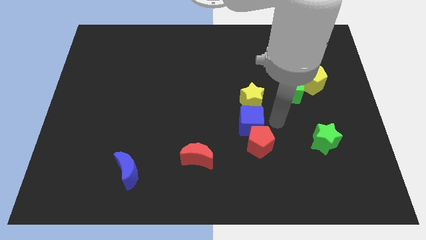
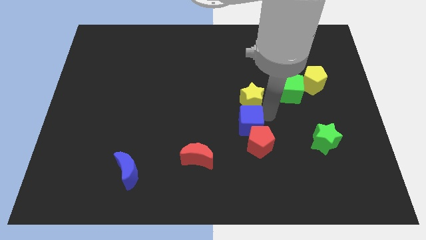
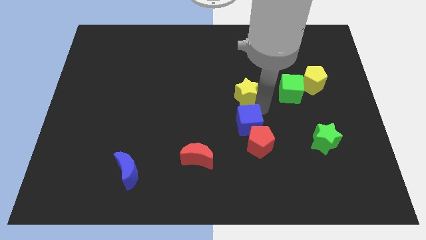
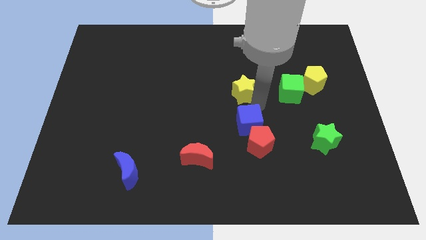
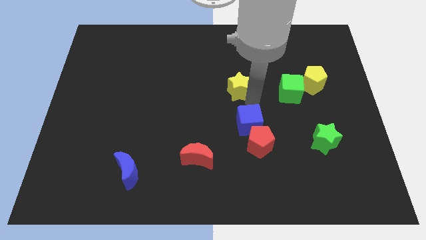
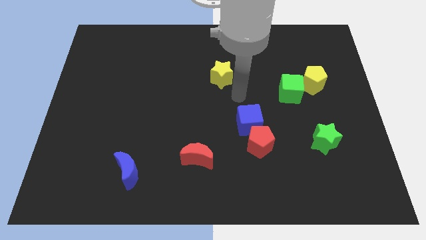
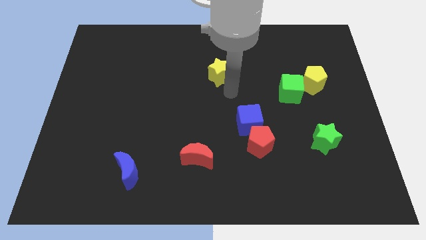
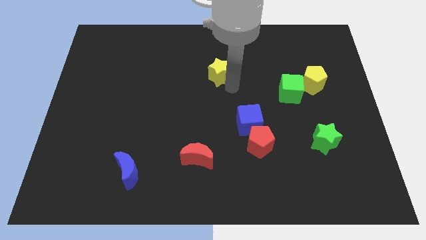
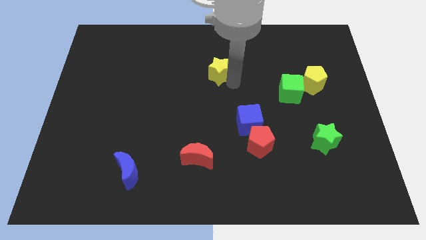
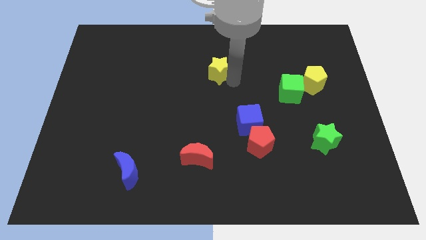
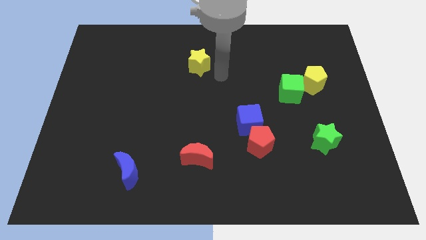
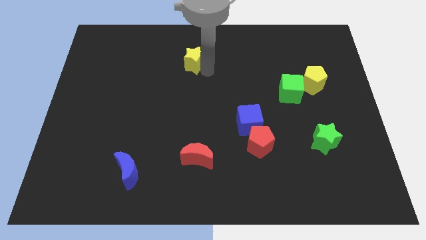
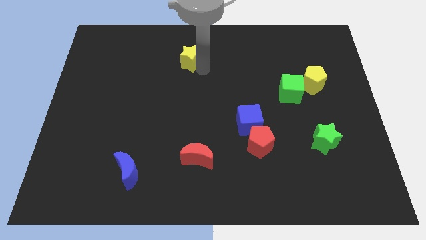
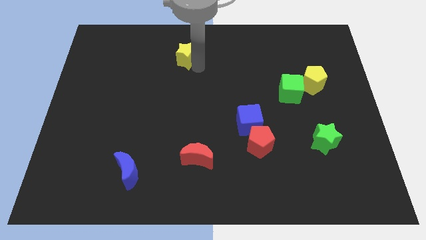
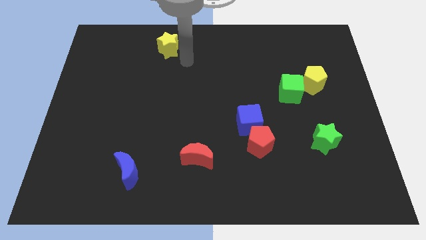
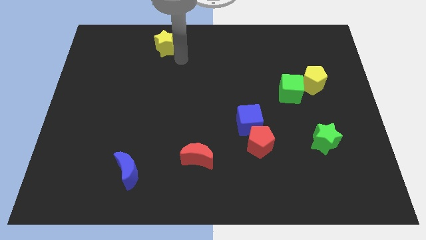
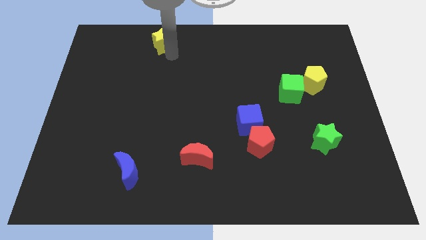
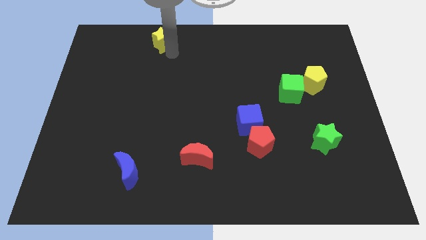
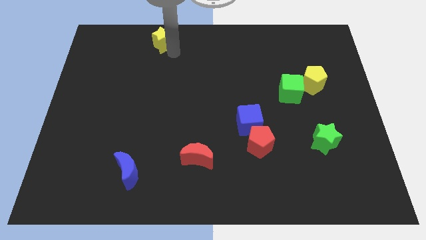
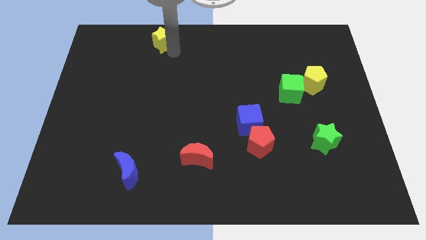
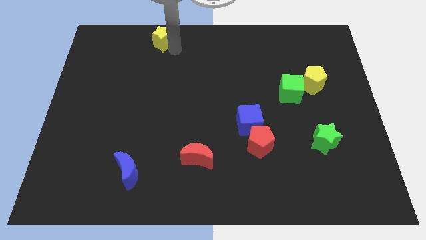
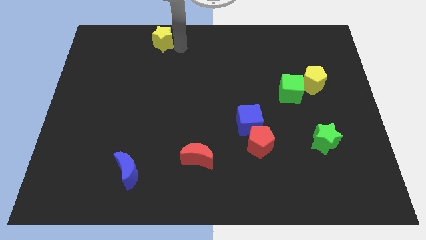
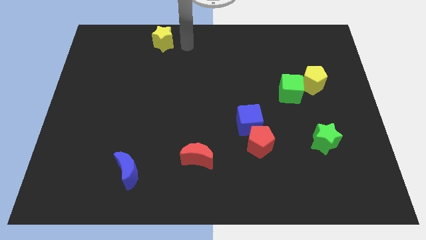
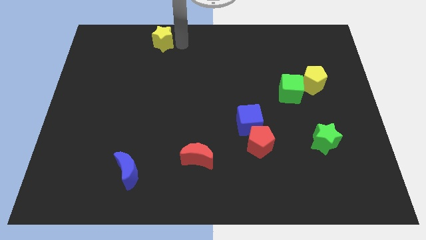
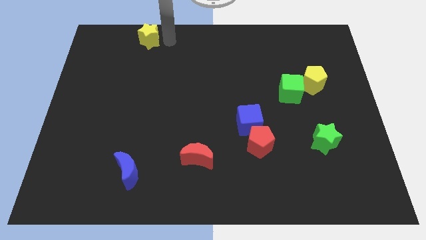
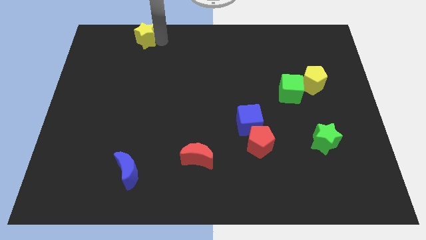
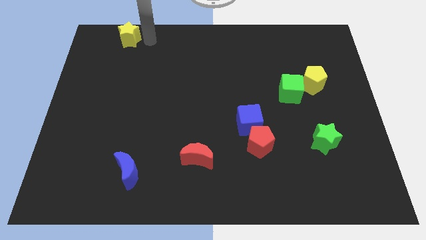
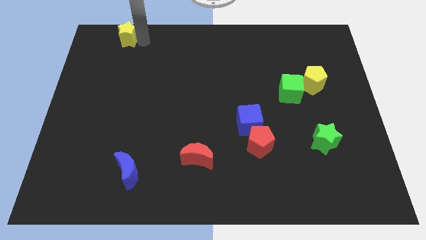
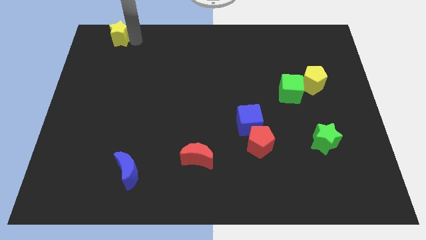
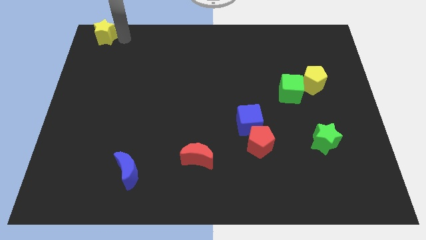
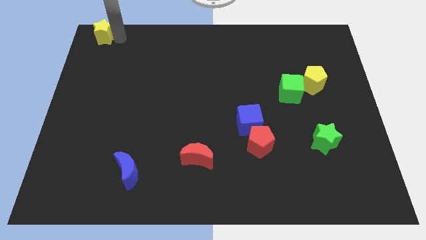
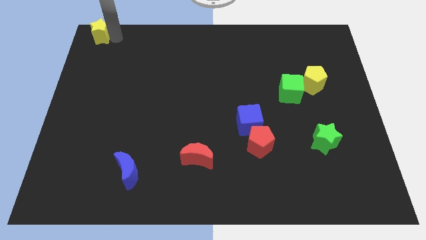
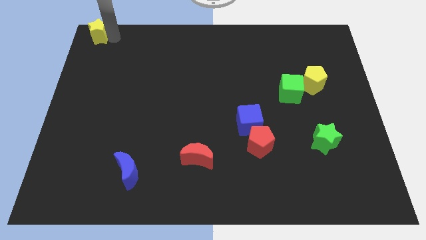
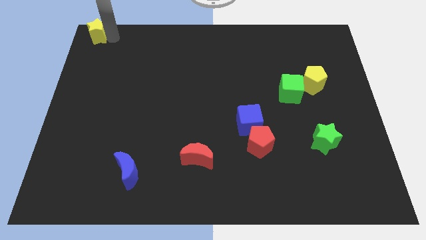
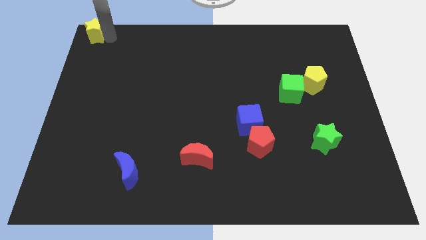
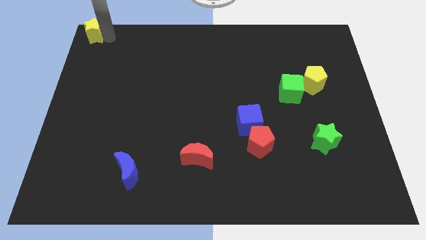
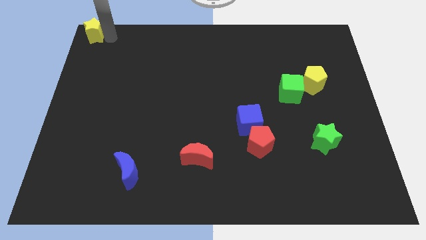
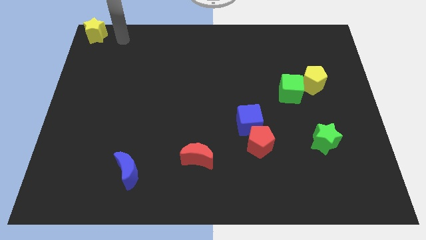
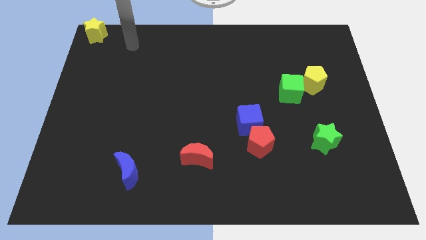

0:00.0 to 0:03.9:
place the yellow star at the top left corner of the board

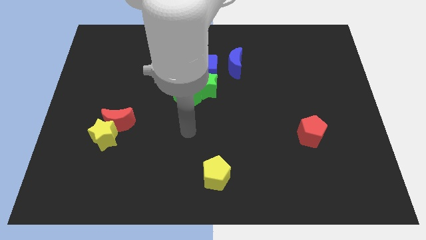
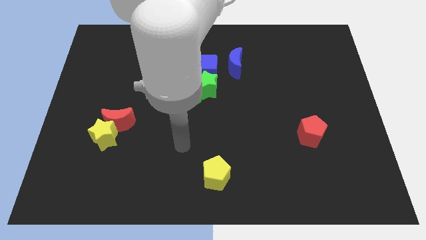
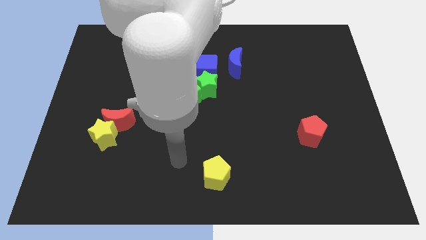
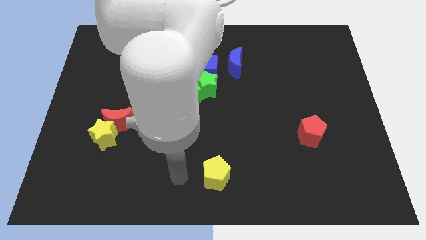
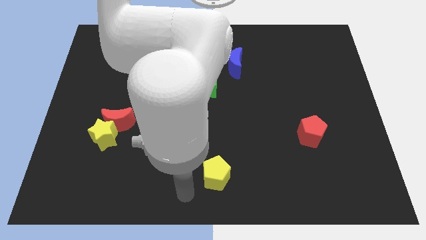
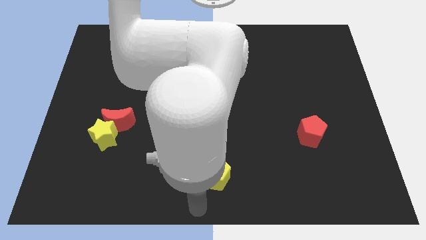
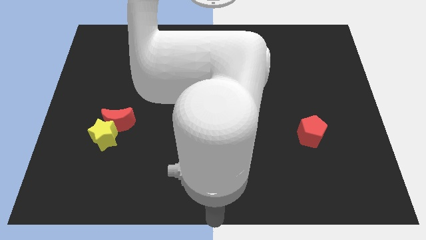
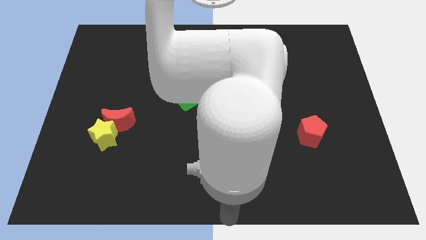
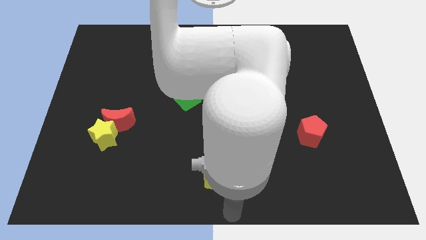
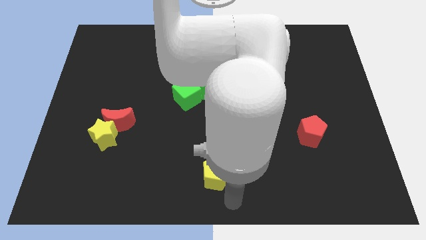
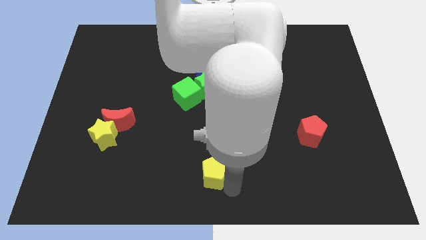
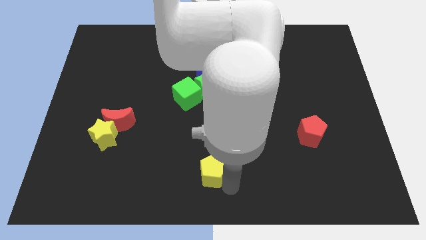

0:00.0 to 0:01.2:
tap the yellow pentagon

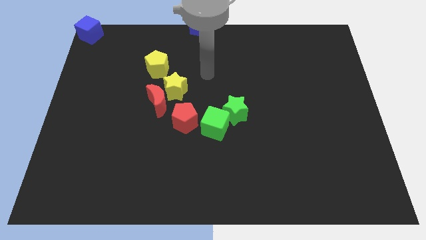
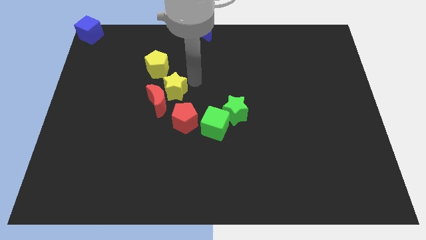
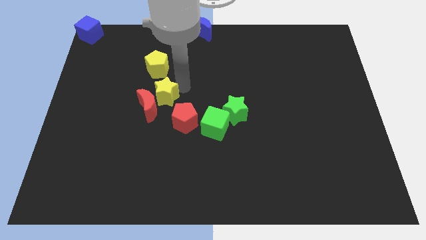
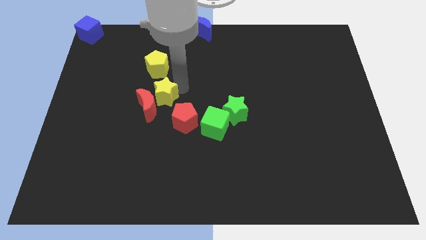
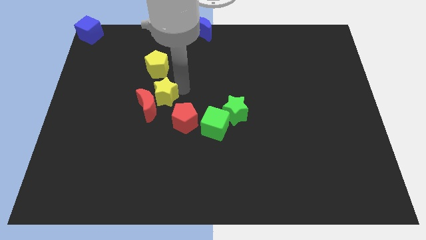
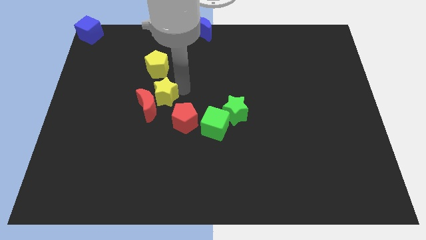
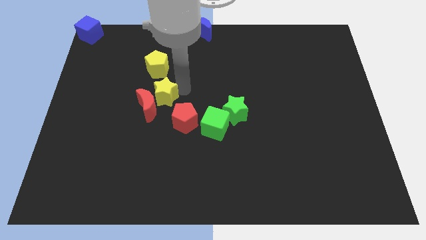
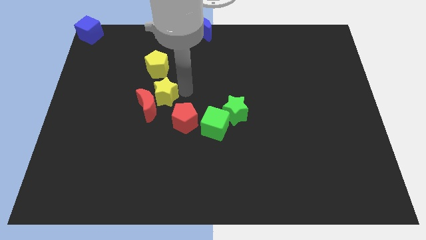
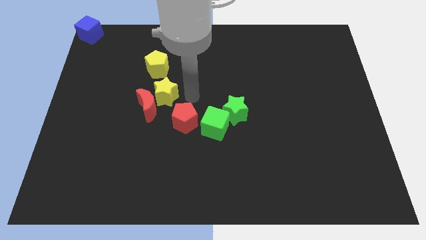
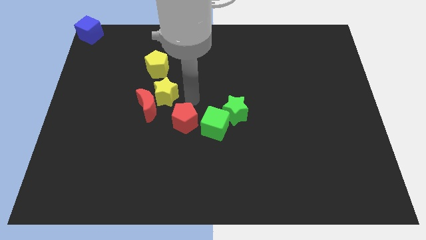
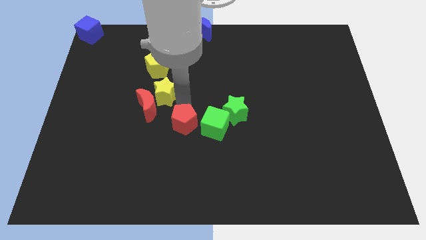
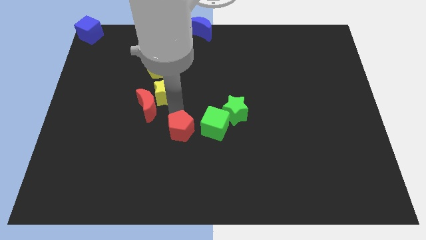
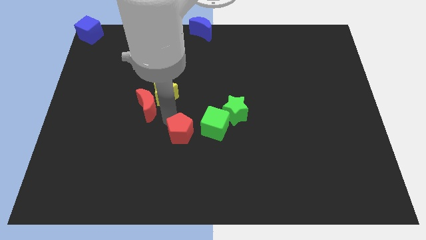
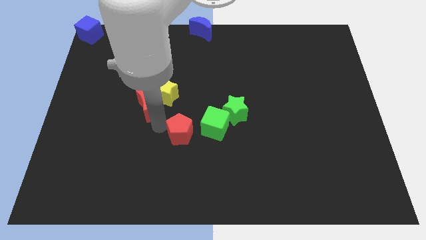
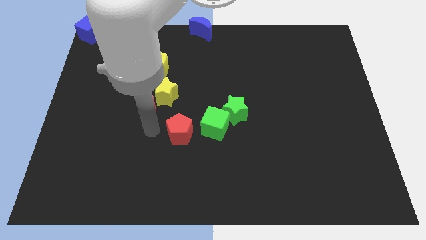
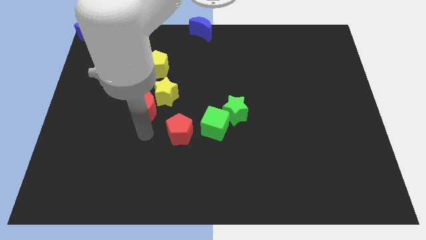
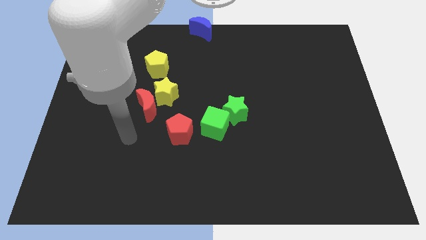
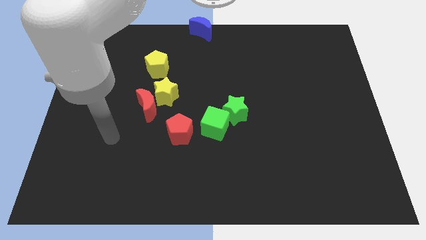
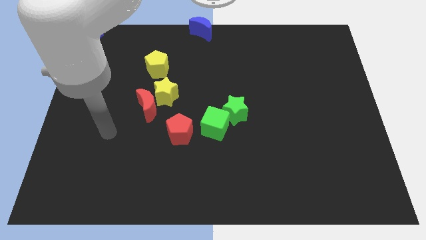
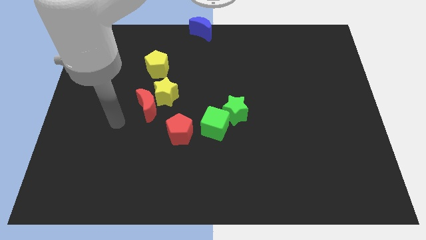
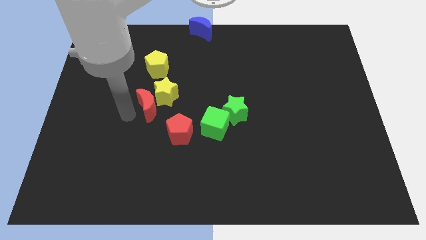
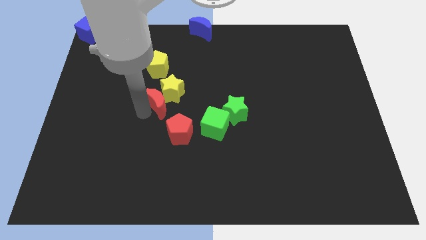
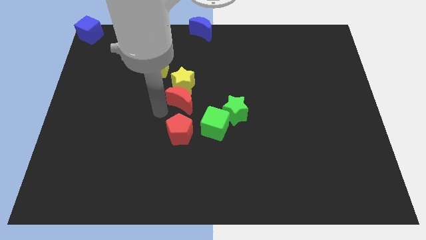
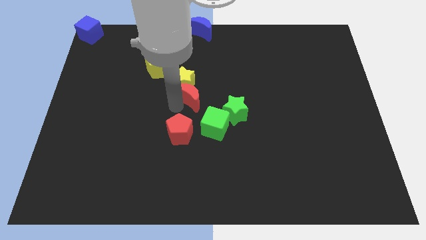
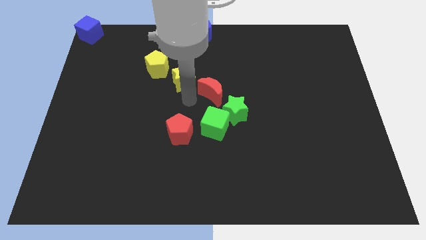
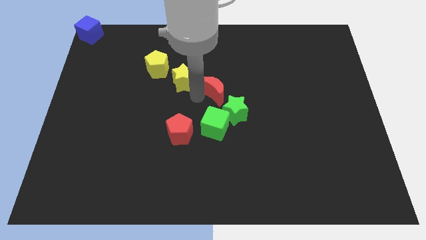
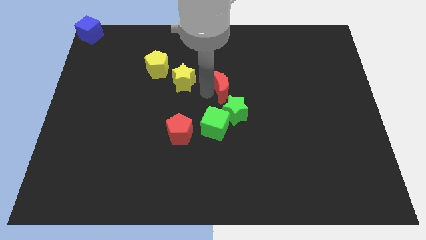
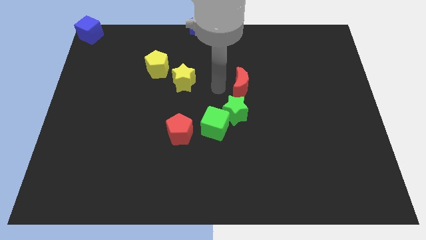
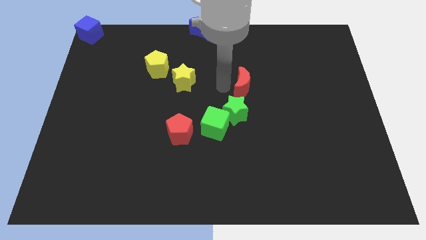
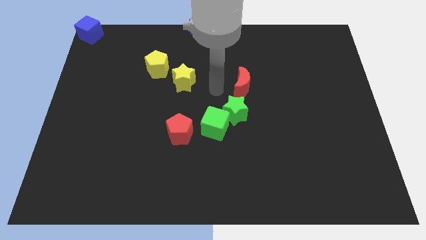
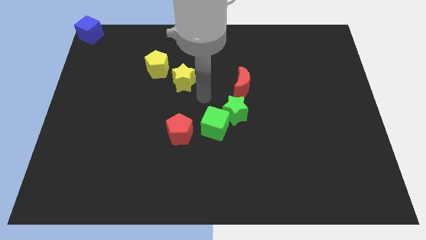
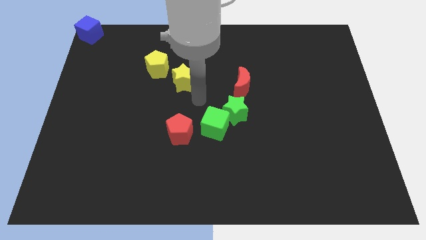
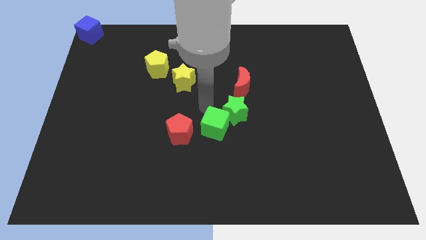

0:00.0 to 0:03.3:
push the red moon above the green star

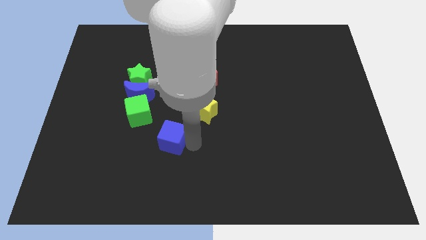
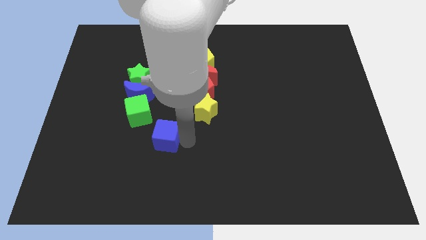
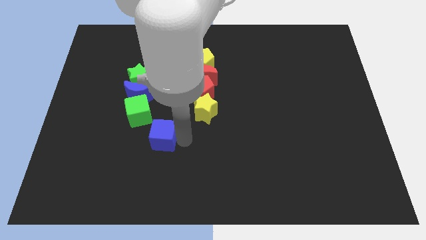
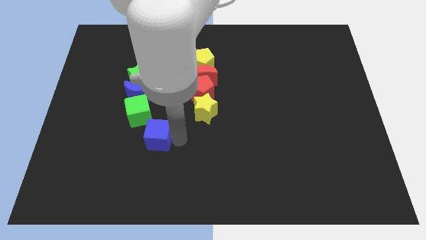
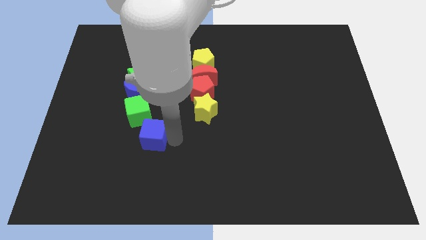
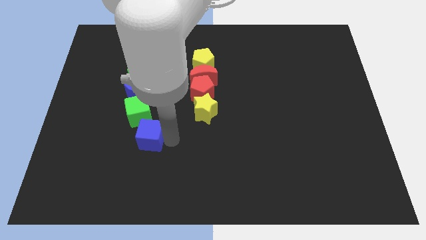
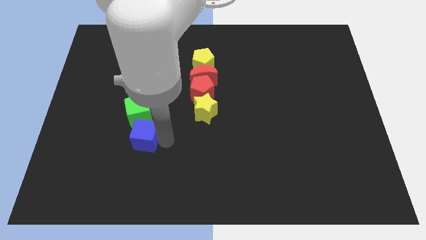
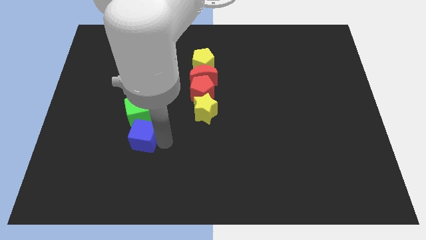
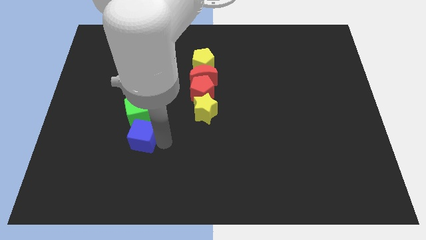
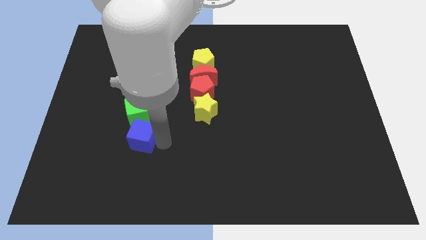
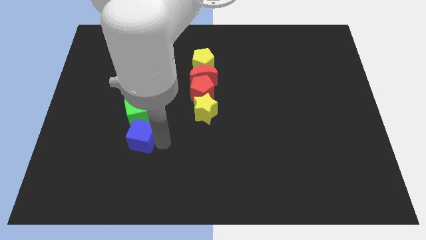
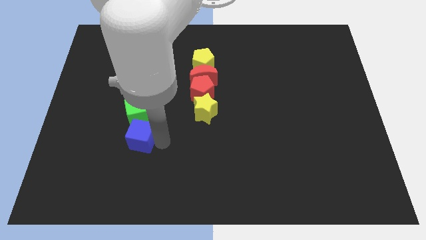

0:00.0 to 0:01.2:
place blue cube below the green cube to form a vertical line
